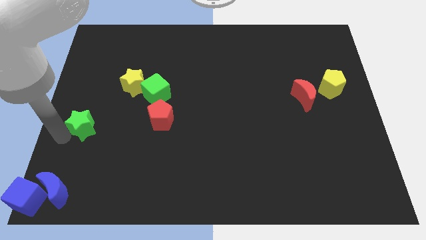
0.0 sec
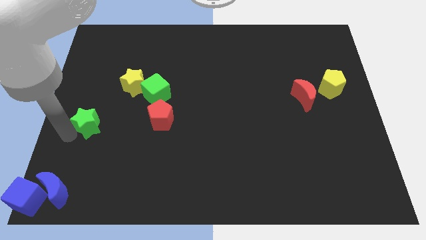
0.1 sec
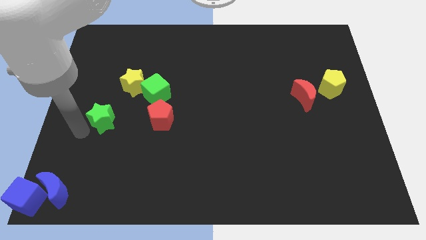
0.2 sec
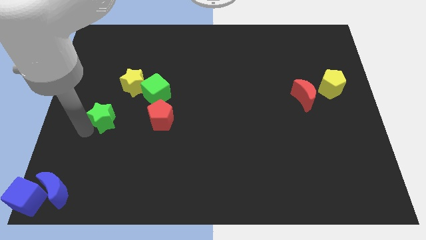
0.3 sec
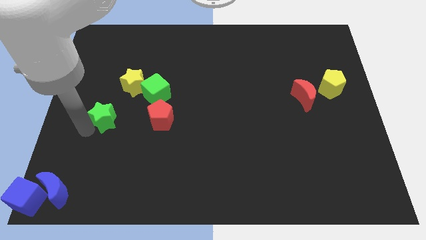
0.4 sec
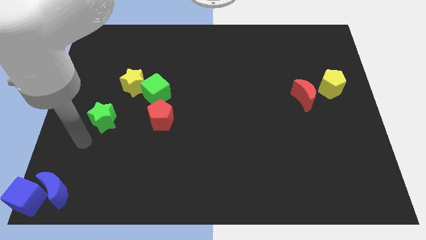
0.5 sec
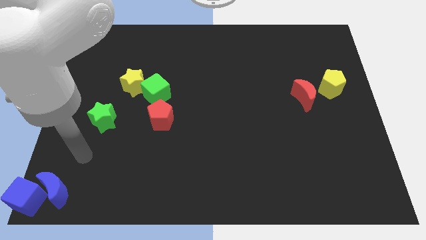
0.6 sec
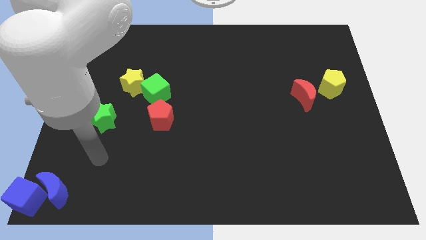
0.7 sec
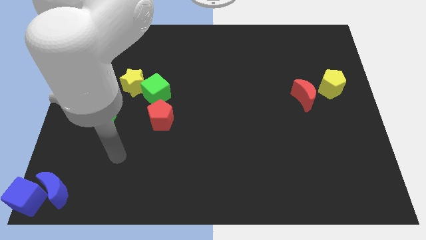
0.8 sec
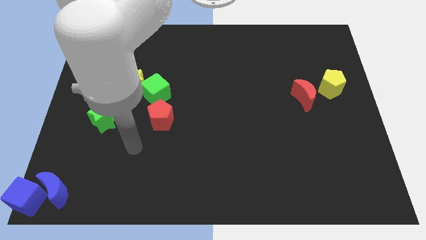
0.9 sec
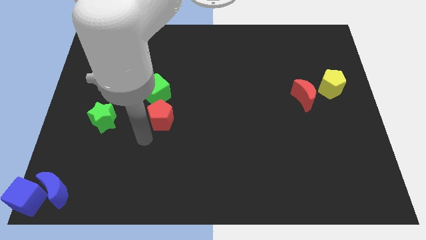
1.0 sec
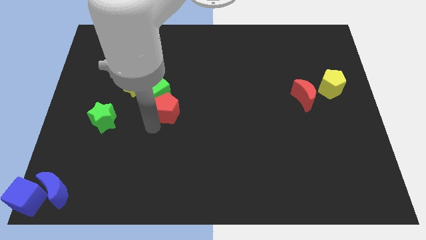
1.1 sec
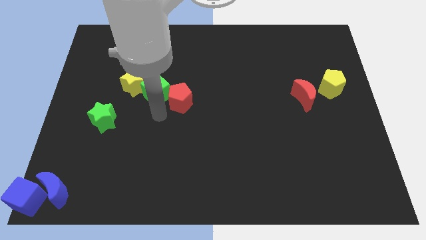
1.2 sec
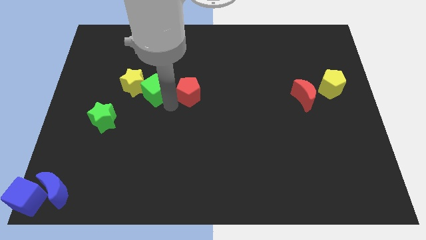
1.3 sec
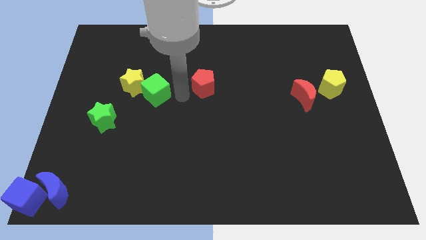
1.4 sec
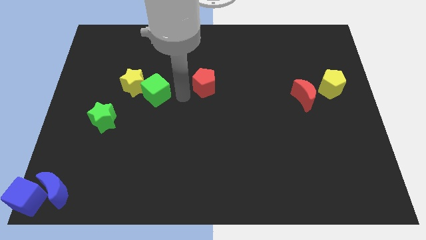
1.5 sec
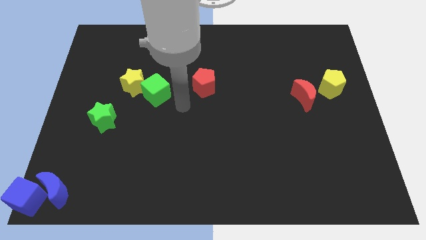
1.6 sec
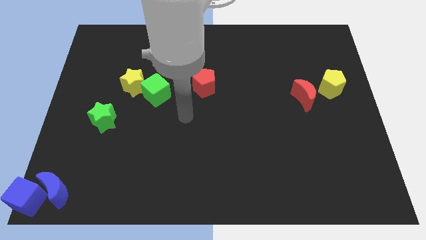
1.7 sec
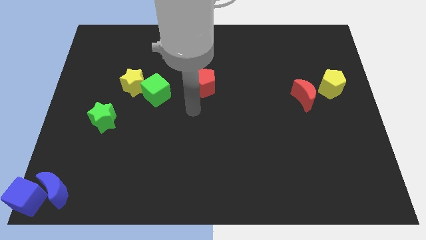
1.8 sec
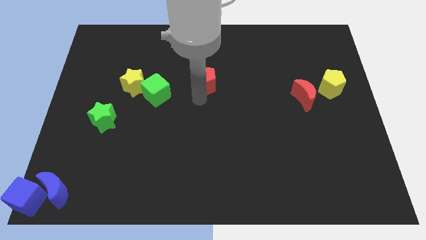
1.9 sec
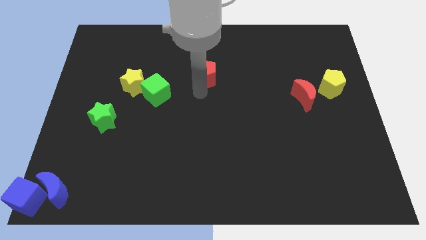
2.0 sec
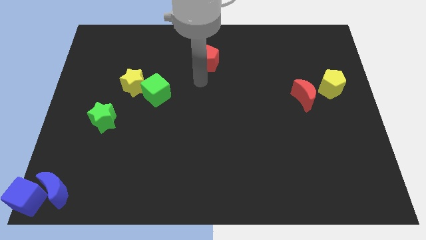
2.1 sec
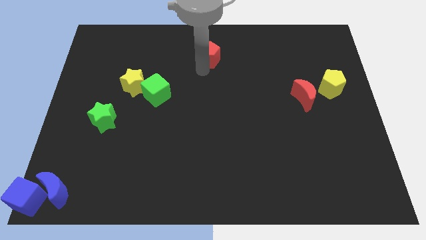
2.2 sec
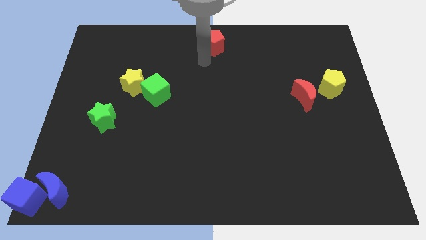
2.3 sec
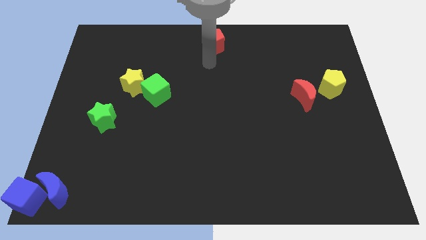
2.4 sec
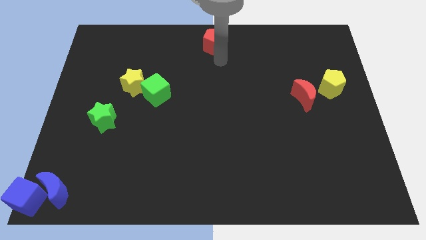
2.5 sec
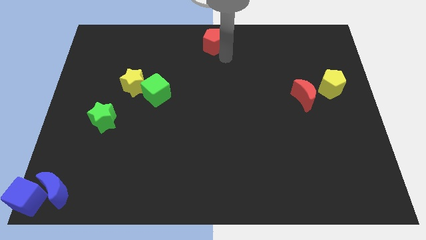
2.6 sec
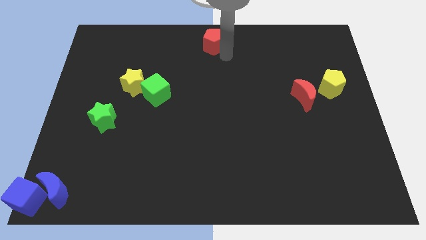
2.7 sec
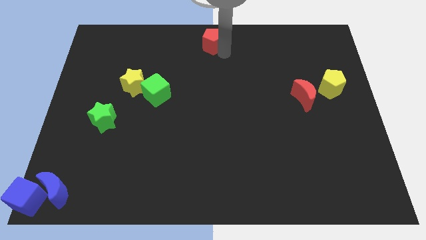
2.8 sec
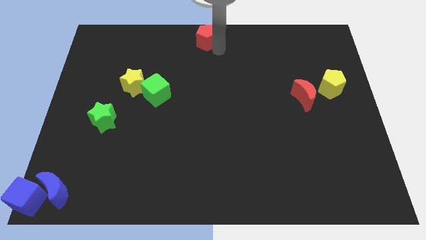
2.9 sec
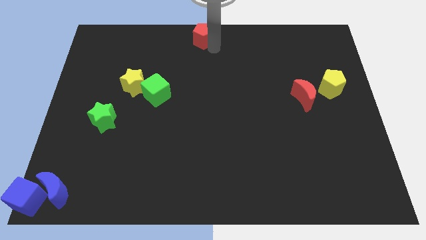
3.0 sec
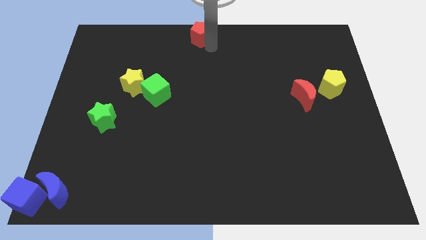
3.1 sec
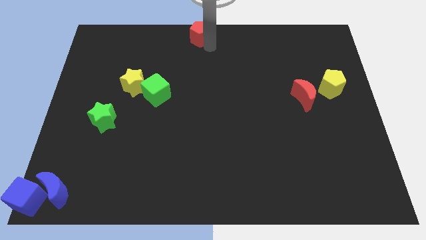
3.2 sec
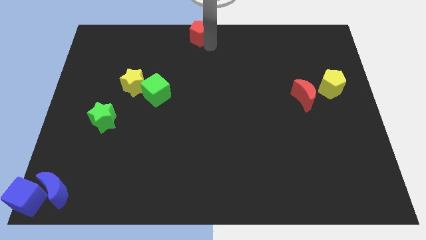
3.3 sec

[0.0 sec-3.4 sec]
place the red pentagon towards the top center of the board

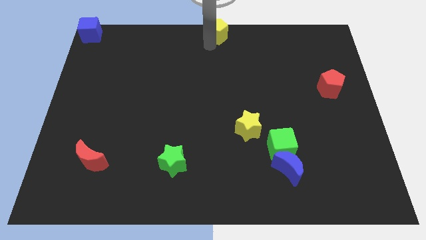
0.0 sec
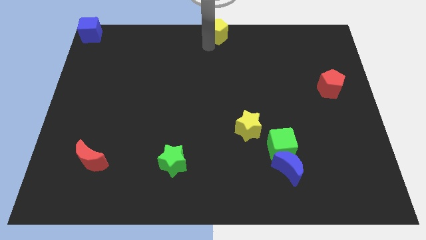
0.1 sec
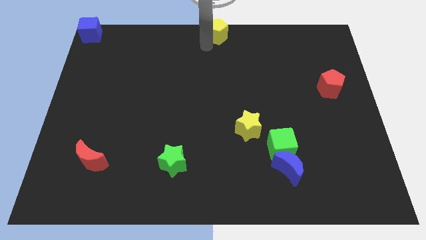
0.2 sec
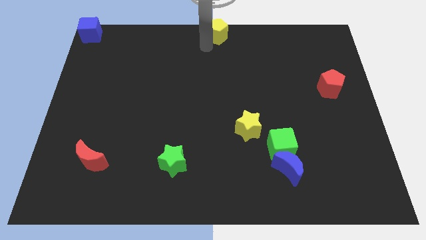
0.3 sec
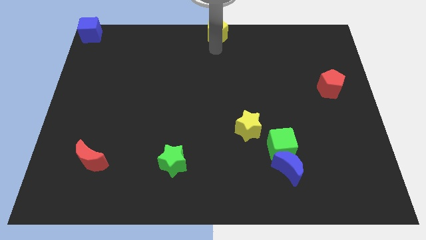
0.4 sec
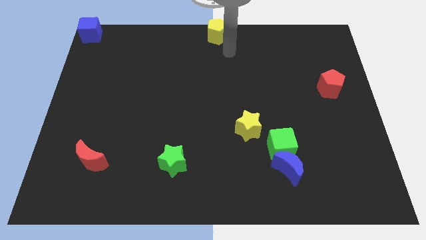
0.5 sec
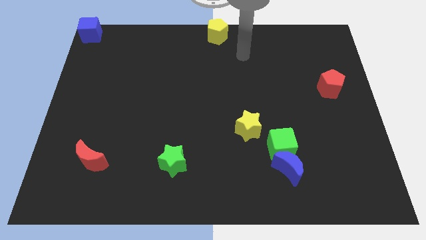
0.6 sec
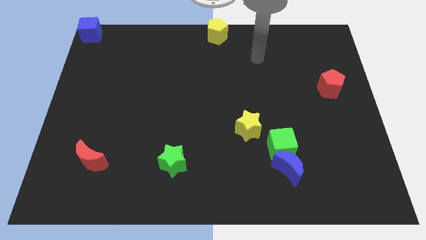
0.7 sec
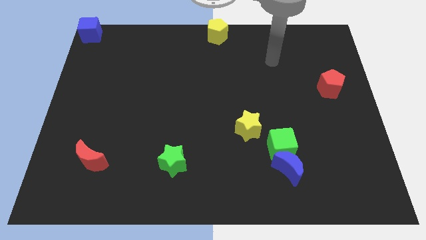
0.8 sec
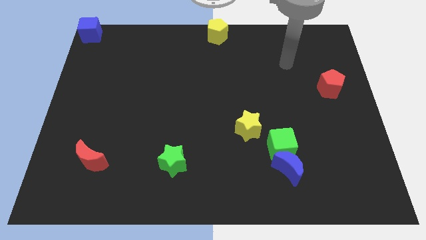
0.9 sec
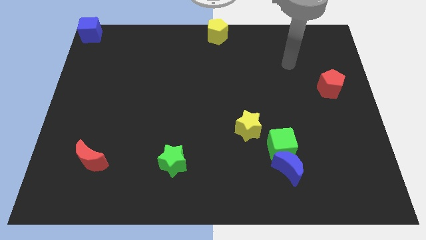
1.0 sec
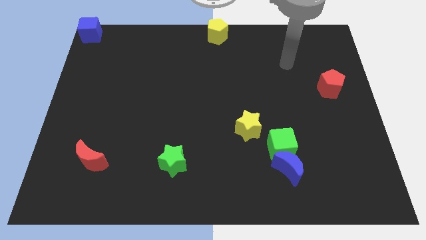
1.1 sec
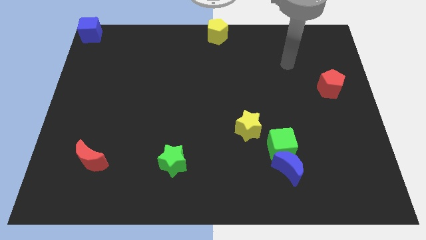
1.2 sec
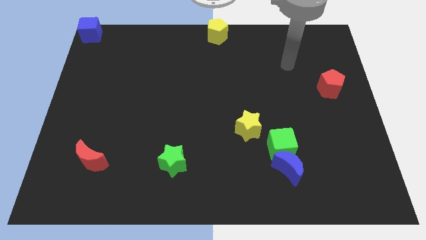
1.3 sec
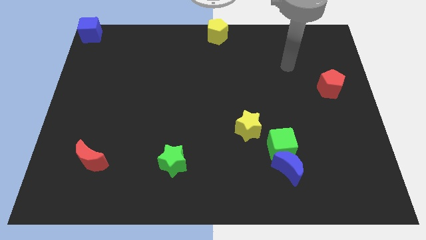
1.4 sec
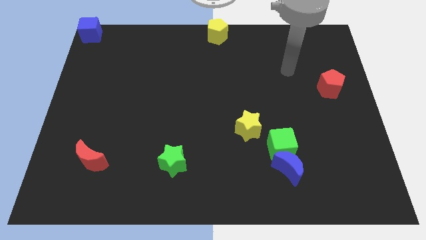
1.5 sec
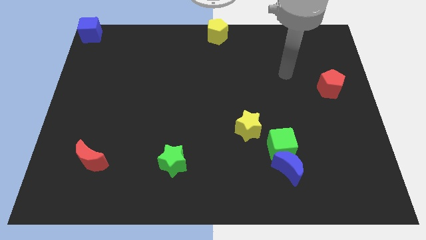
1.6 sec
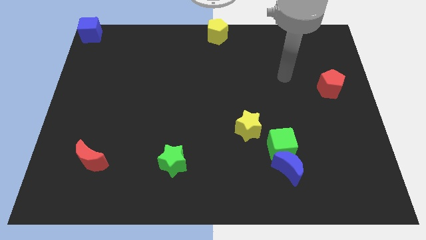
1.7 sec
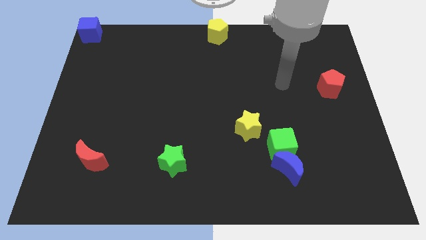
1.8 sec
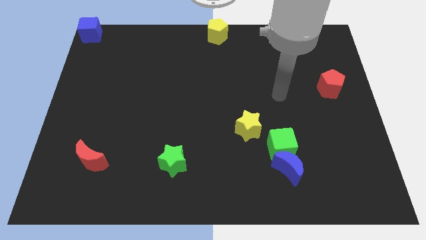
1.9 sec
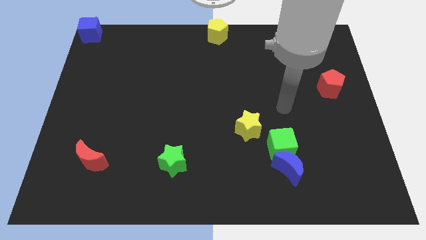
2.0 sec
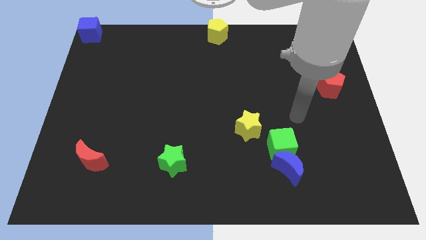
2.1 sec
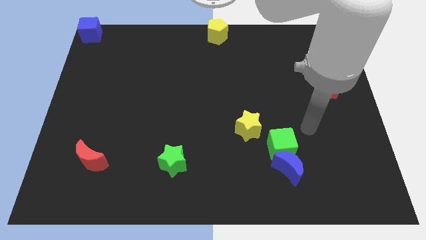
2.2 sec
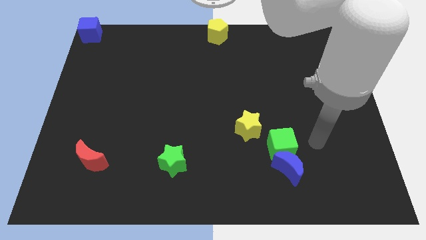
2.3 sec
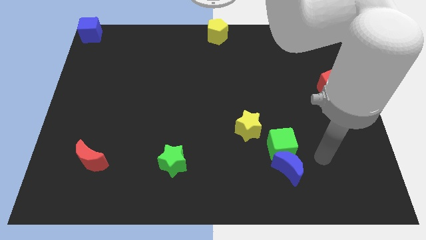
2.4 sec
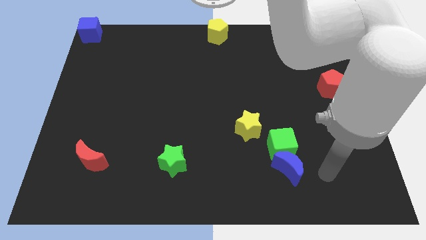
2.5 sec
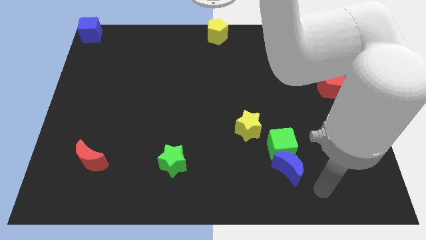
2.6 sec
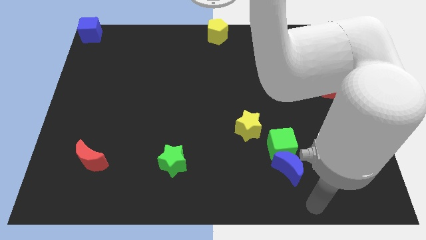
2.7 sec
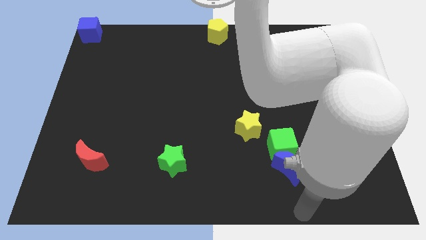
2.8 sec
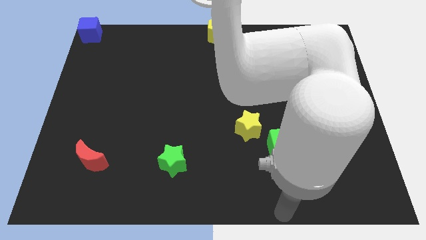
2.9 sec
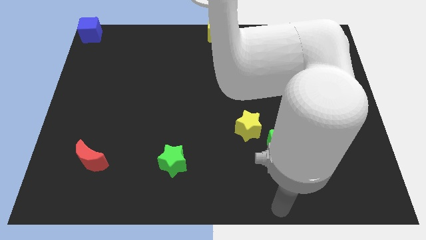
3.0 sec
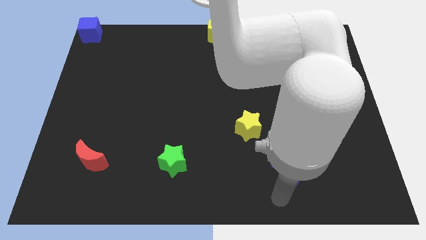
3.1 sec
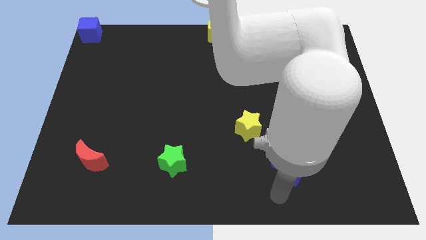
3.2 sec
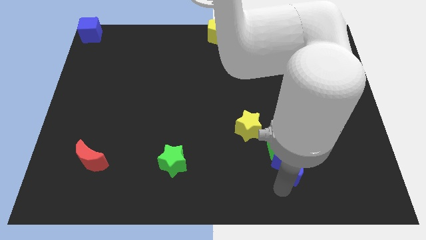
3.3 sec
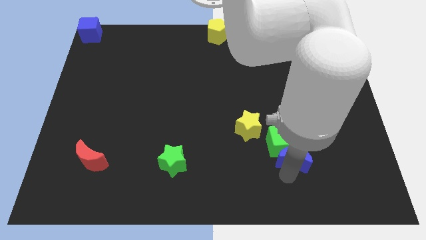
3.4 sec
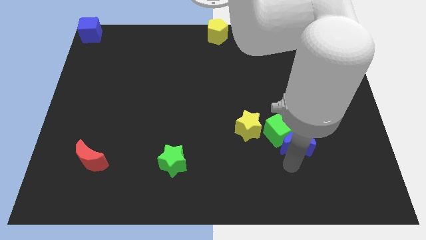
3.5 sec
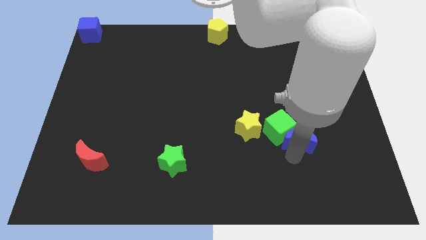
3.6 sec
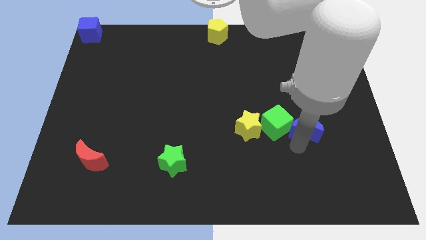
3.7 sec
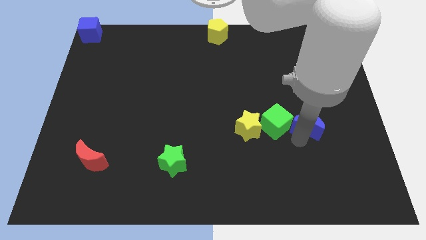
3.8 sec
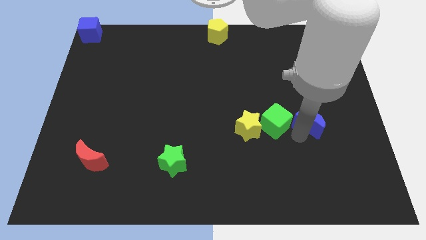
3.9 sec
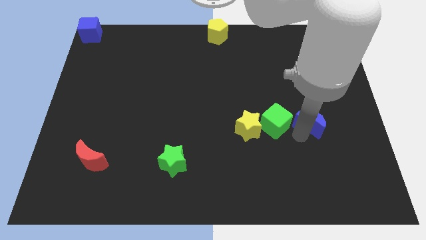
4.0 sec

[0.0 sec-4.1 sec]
move your arm away from the yellow pentagon

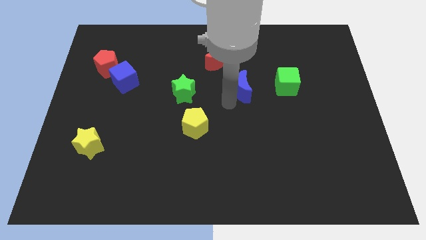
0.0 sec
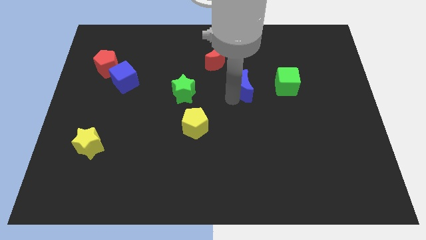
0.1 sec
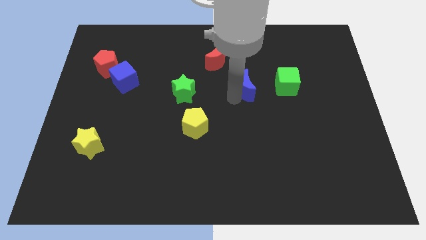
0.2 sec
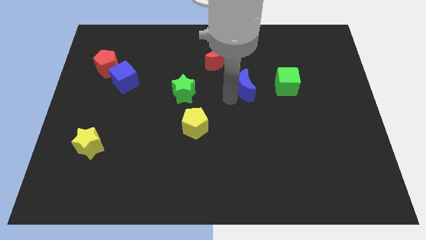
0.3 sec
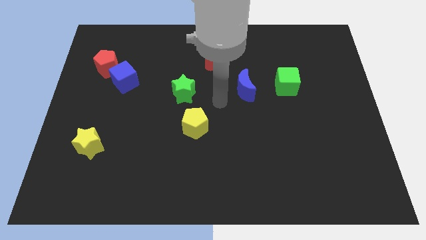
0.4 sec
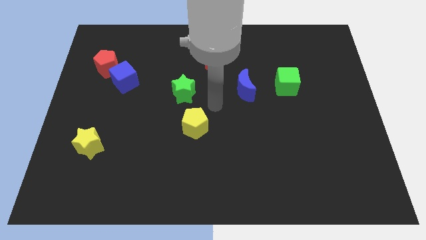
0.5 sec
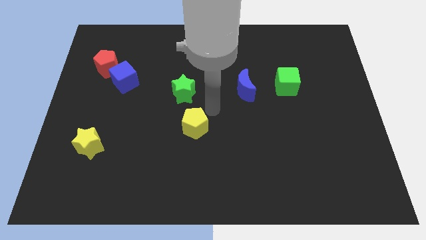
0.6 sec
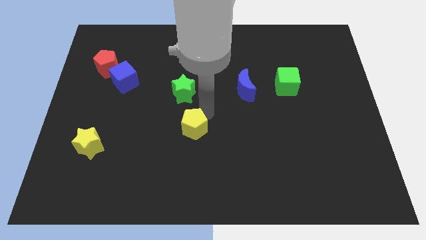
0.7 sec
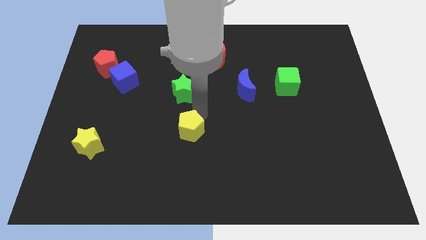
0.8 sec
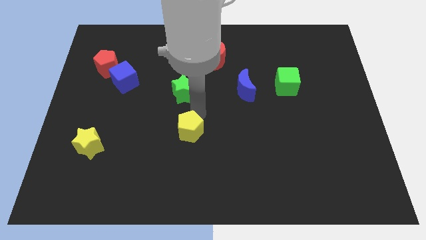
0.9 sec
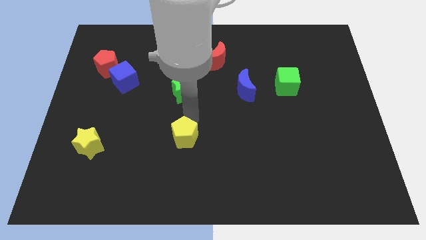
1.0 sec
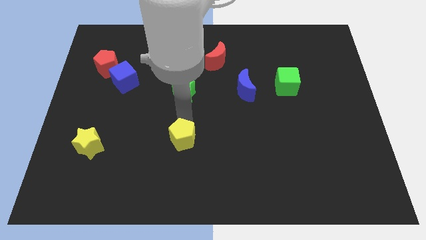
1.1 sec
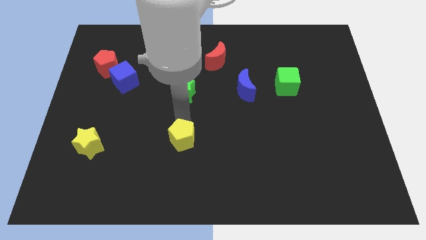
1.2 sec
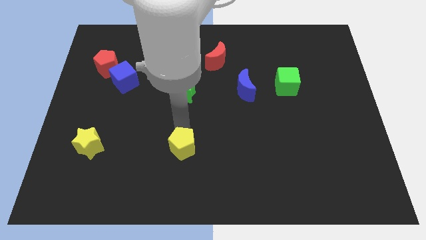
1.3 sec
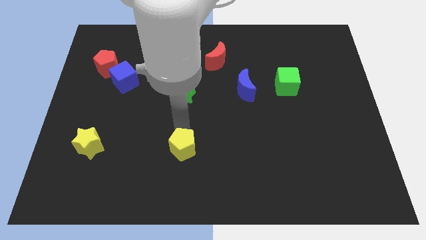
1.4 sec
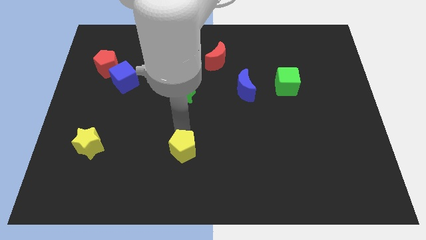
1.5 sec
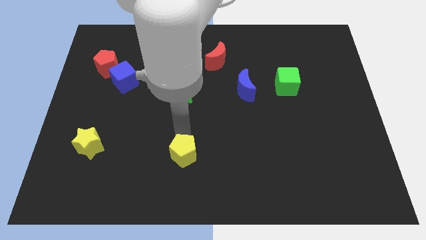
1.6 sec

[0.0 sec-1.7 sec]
place the yellow pentagon to the right of the yellow star

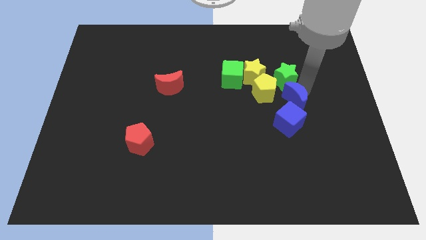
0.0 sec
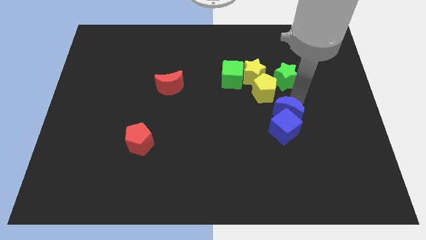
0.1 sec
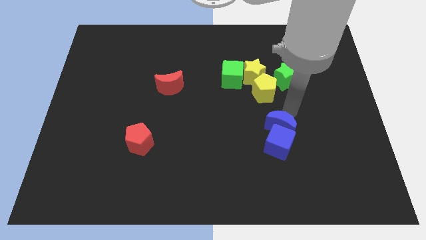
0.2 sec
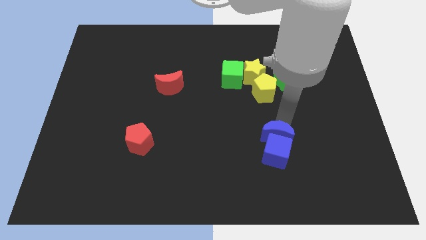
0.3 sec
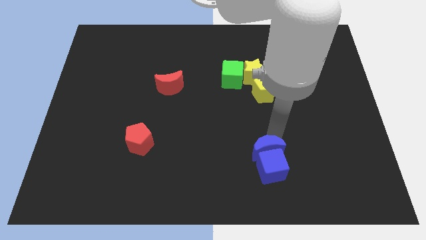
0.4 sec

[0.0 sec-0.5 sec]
place blue crescent below yellow pentagon
